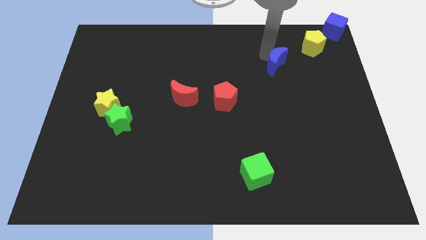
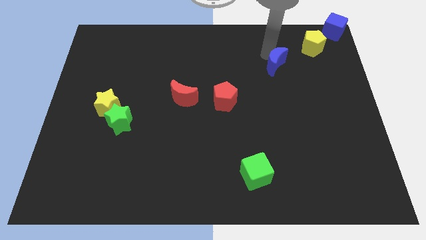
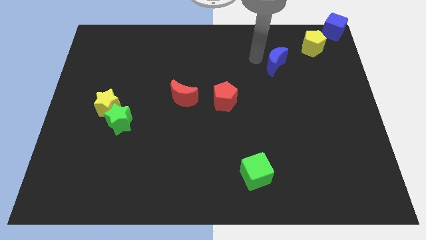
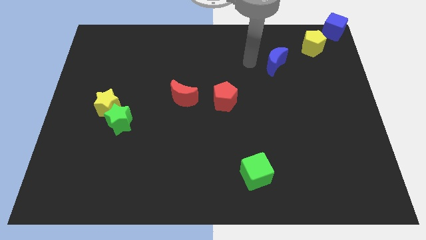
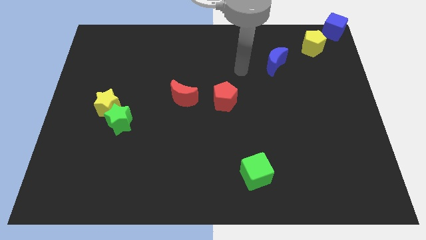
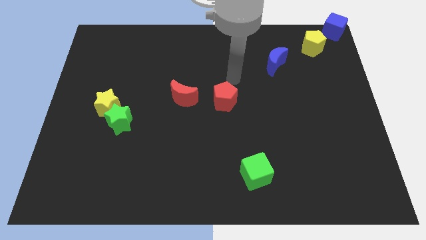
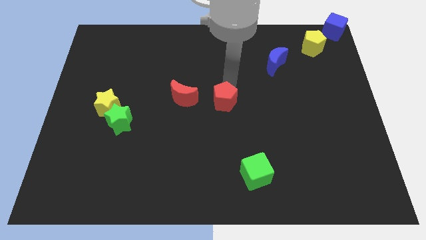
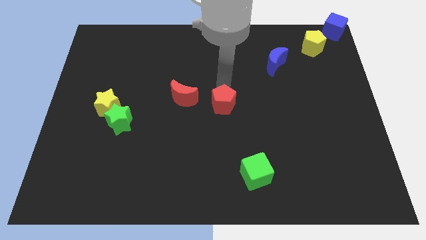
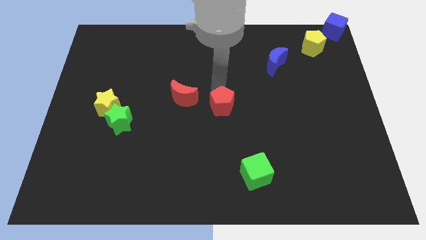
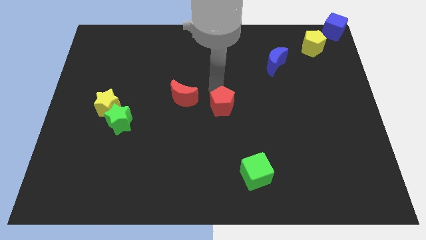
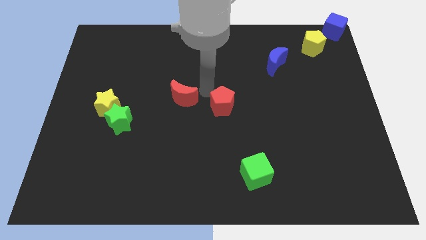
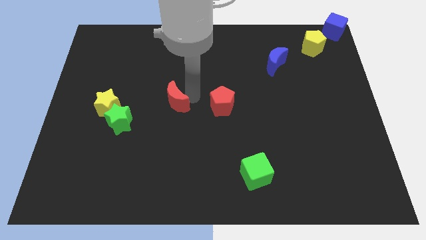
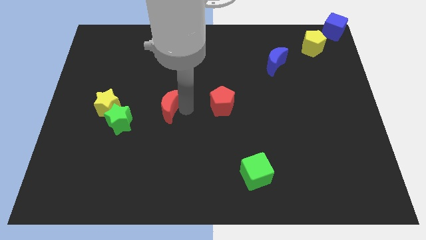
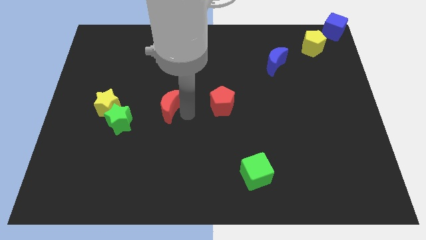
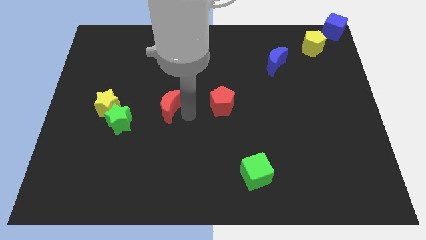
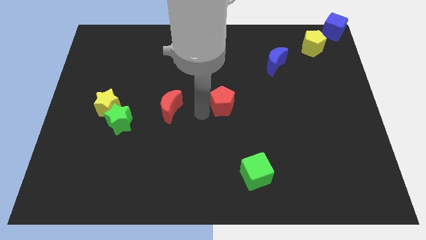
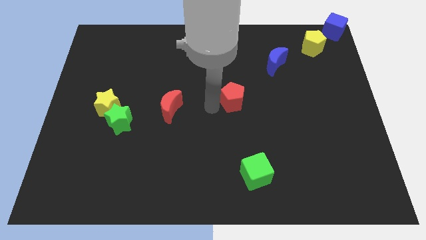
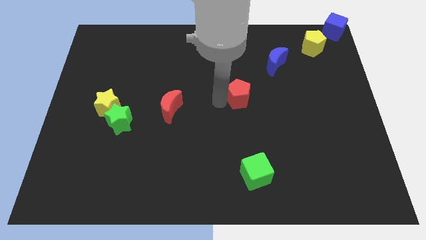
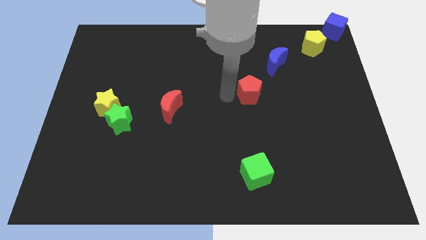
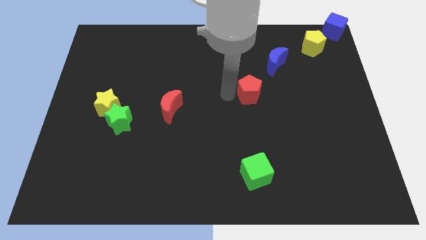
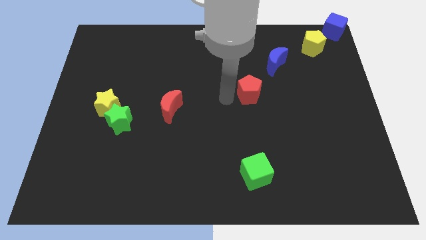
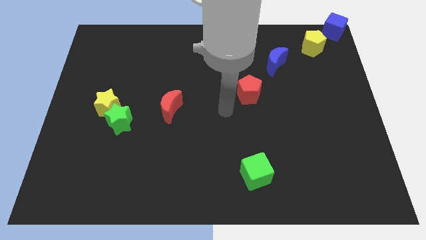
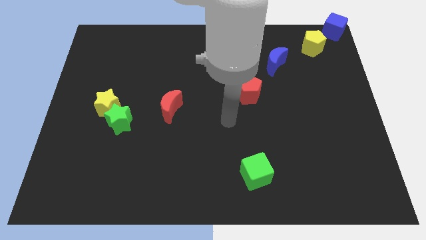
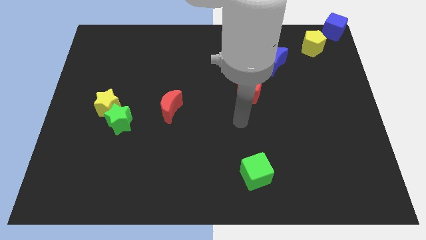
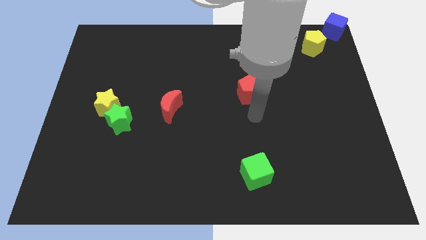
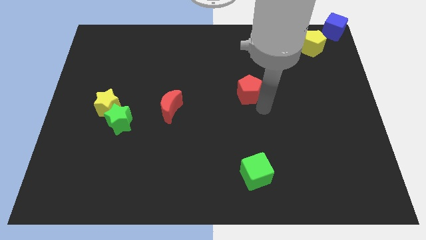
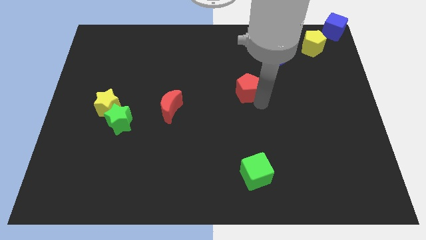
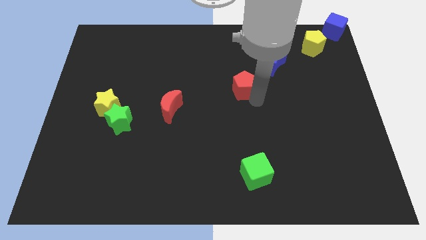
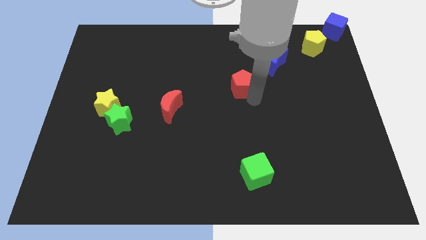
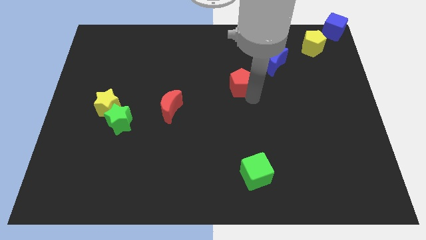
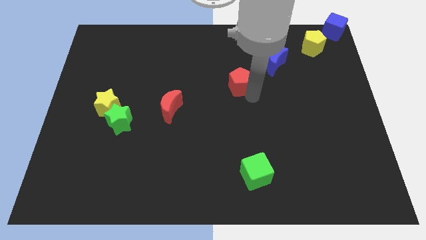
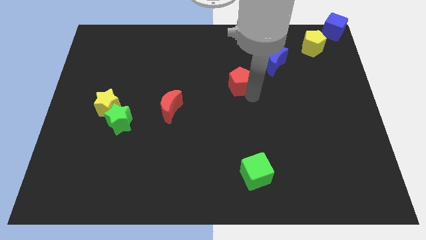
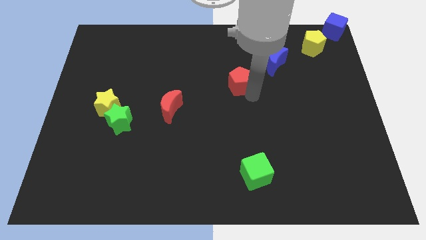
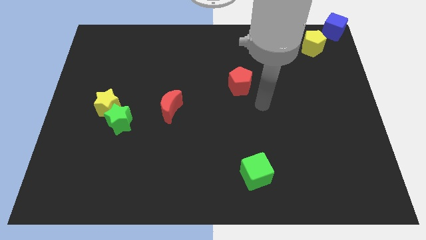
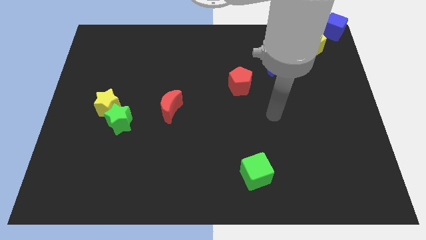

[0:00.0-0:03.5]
place red pentagon above the green block

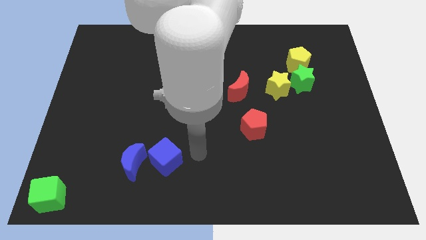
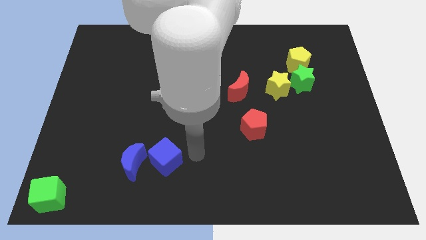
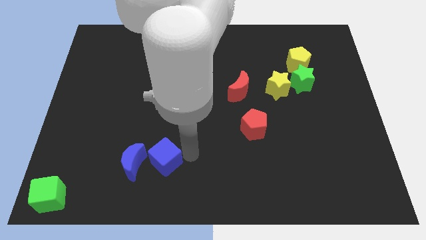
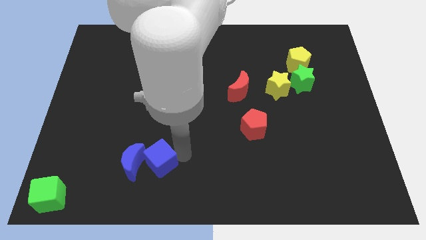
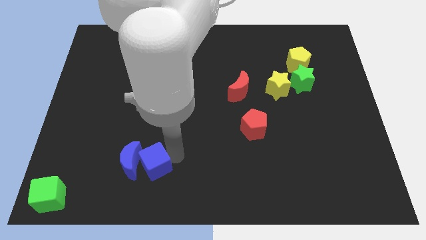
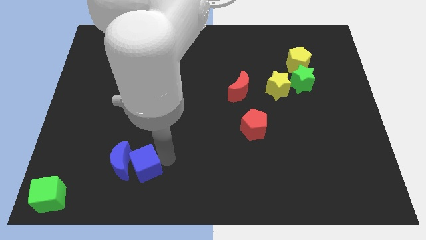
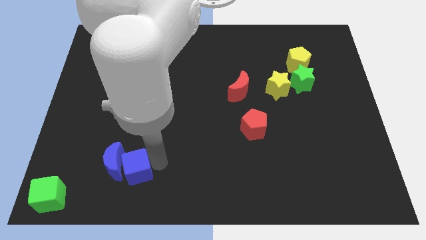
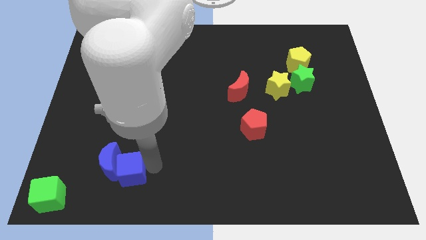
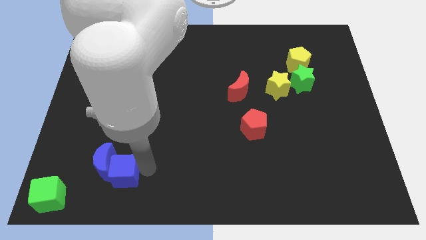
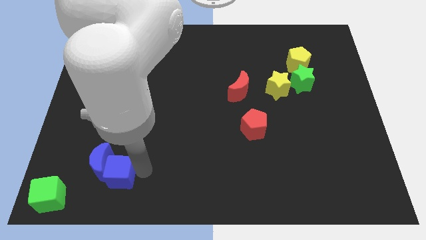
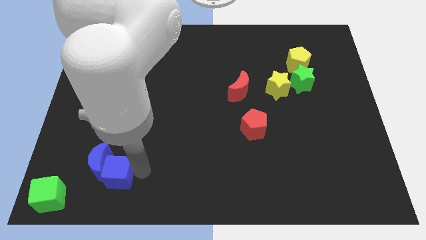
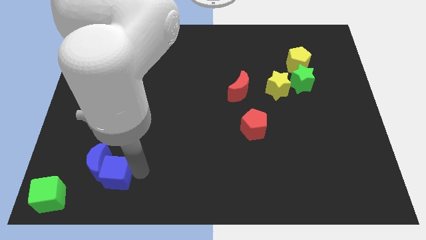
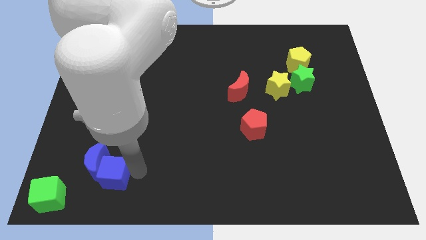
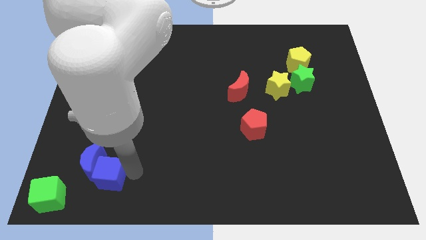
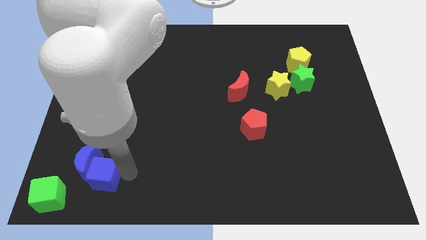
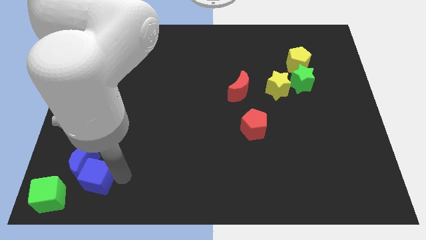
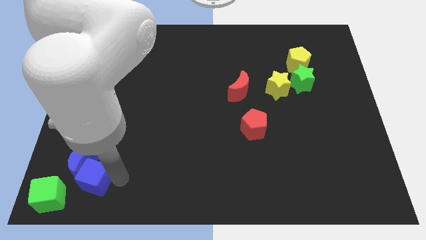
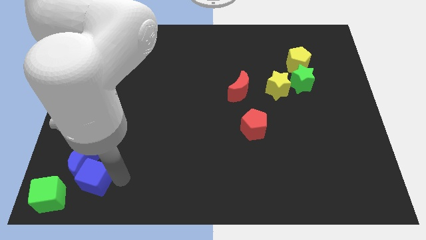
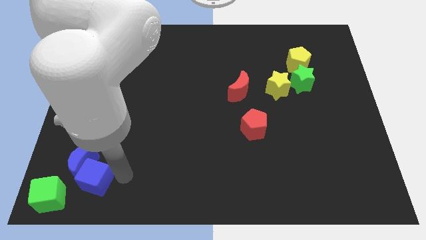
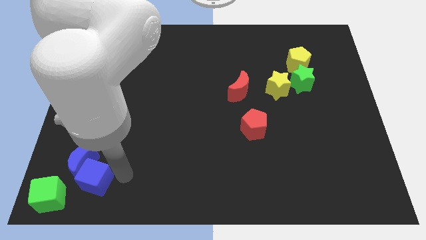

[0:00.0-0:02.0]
push the blue cube into the blue moon

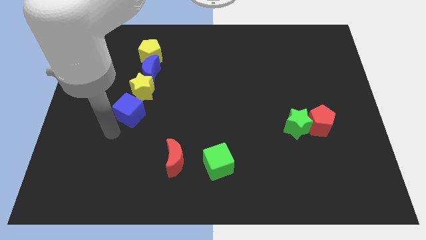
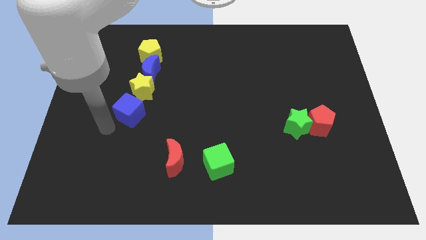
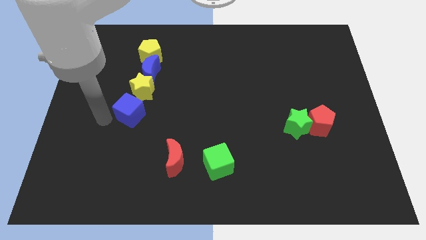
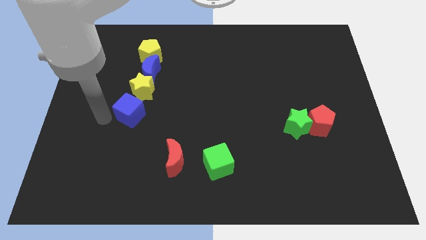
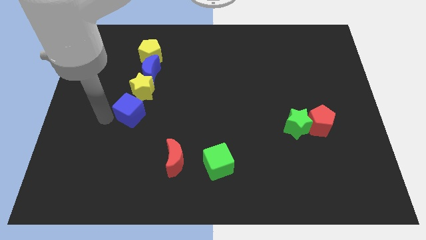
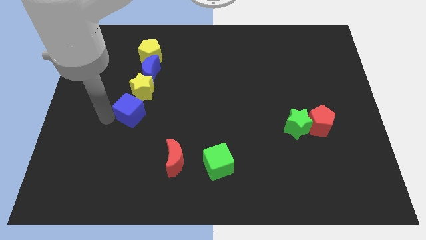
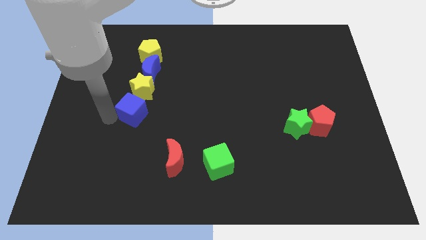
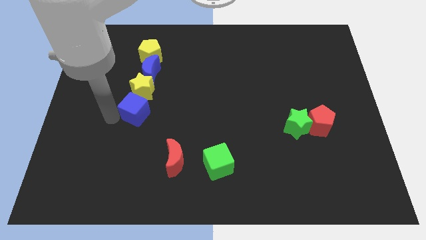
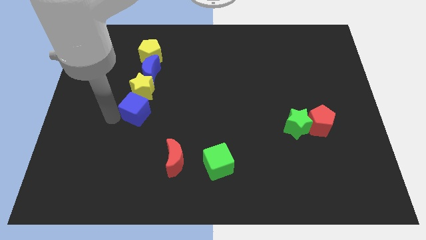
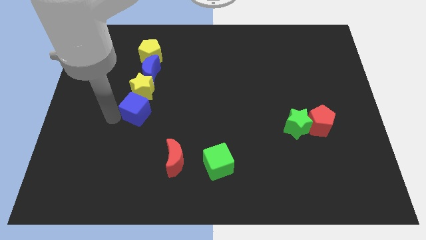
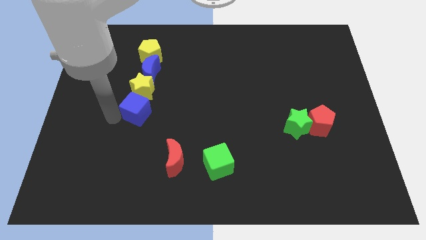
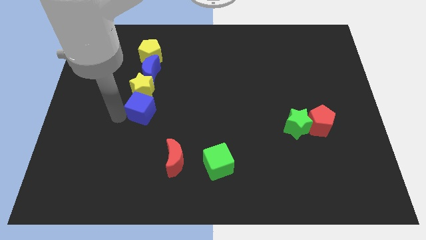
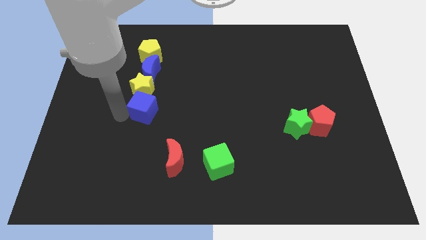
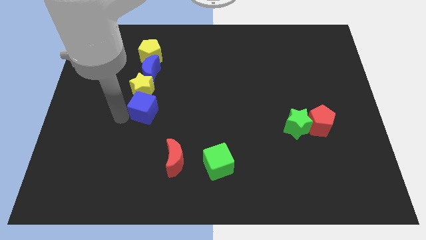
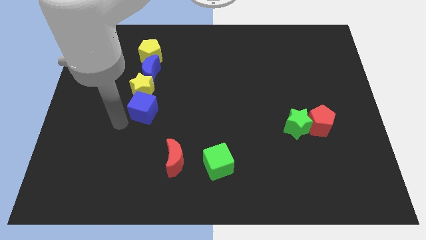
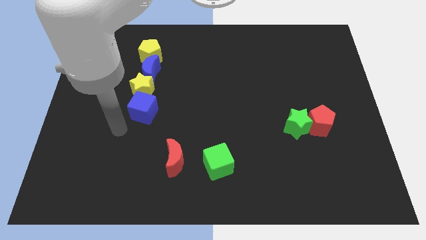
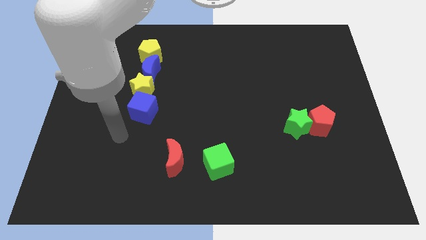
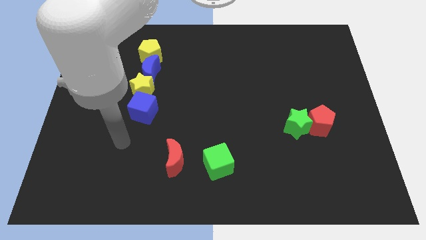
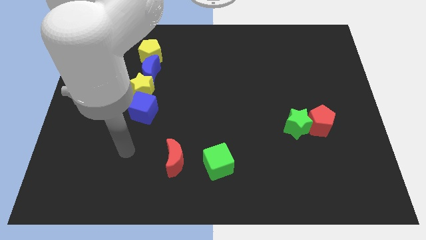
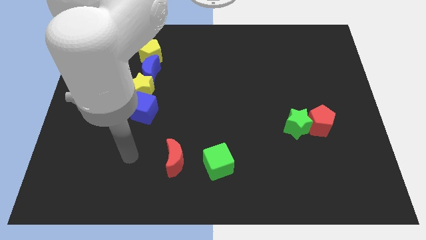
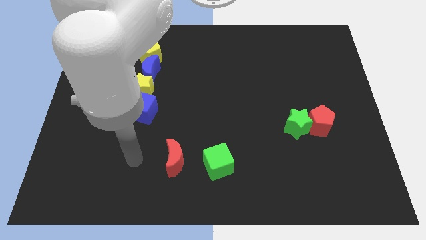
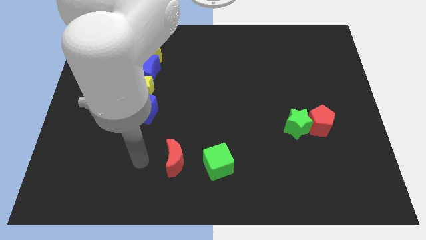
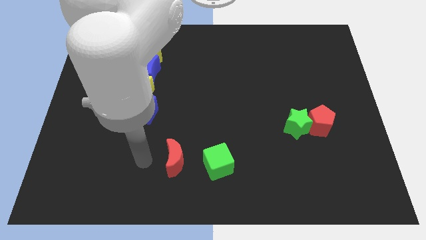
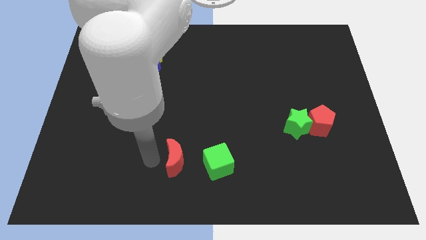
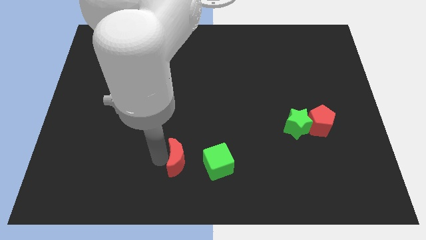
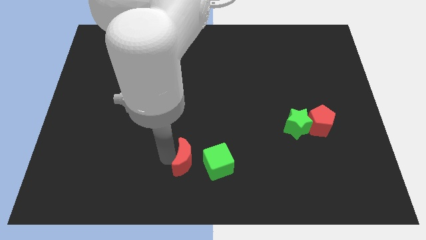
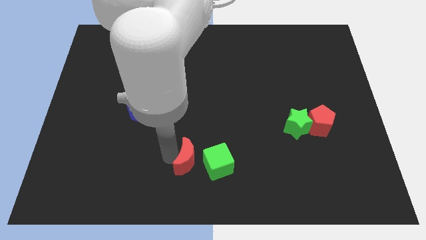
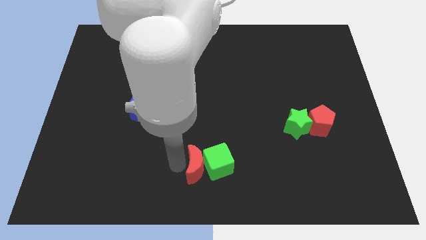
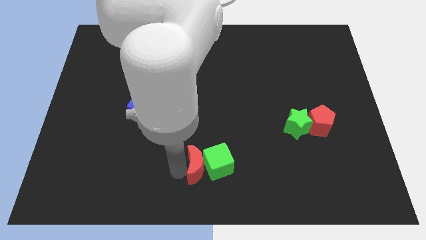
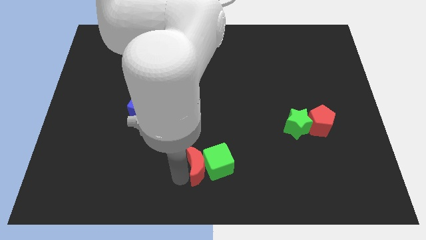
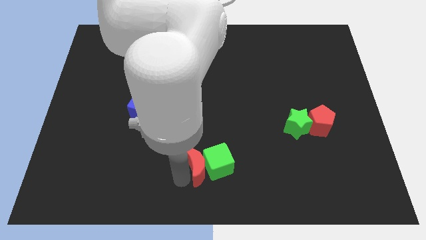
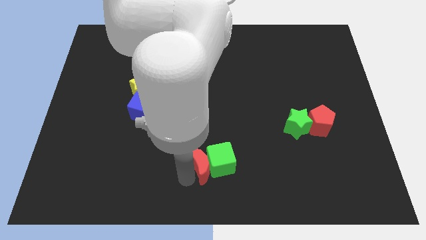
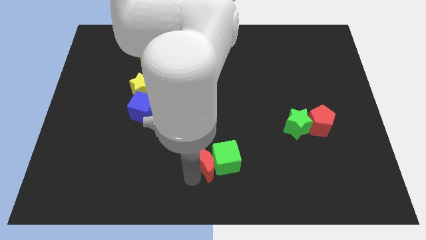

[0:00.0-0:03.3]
push the red moon near to the green cube

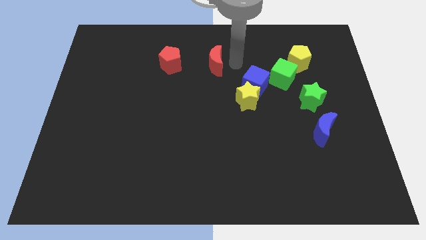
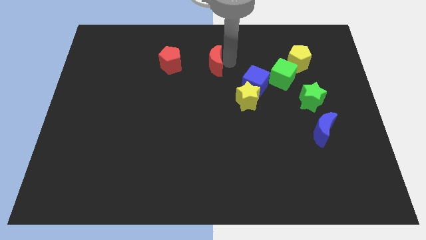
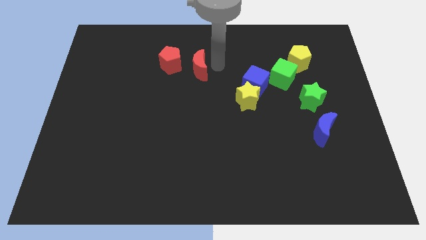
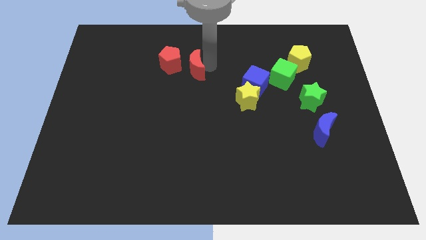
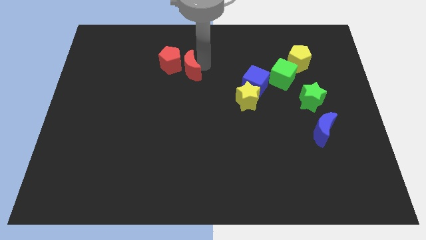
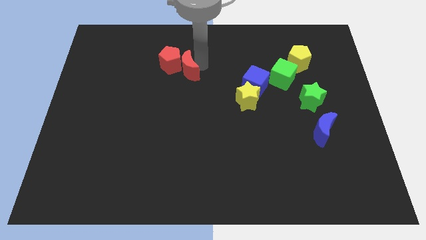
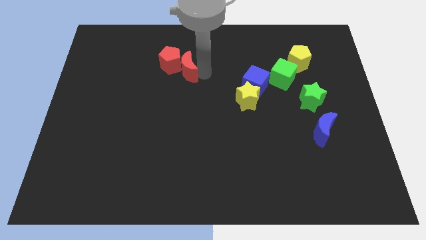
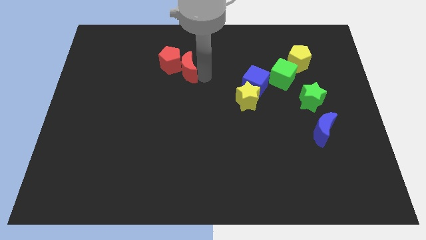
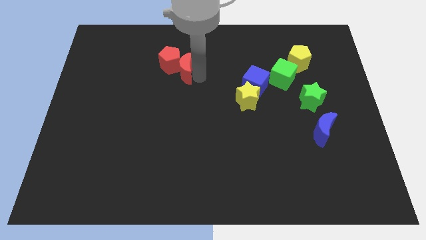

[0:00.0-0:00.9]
push the red crescent into the red pentagon
